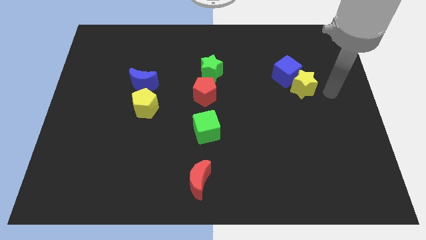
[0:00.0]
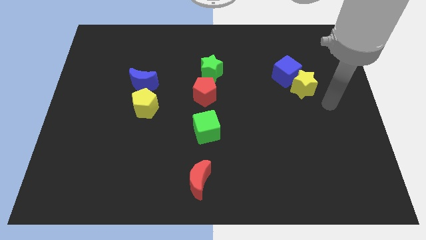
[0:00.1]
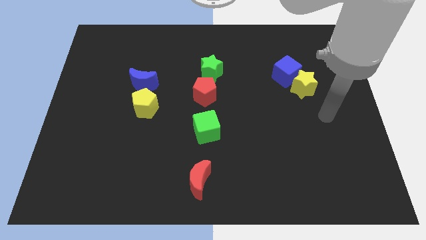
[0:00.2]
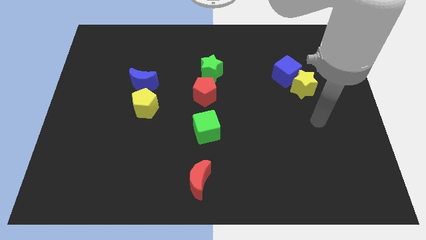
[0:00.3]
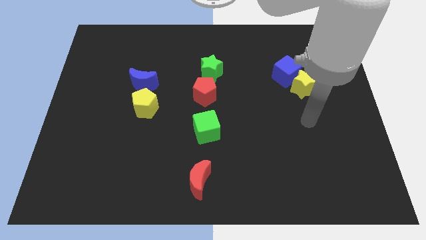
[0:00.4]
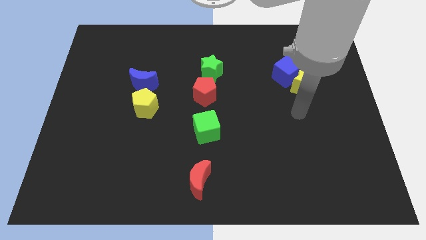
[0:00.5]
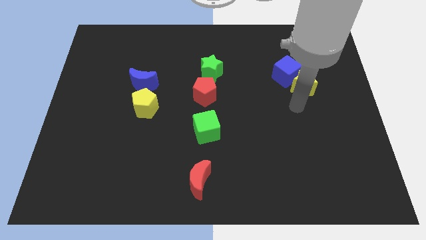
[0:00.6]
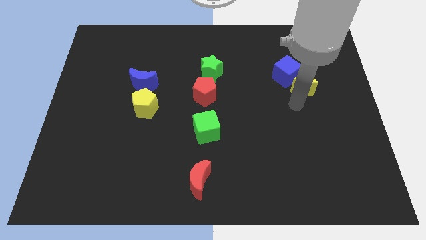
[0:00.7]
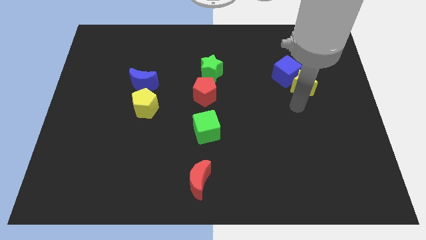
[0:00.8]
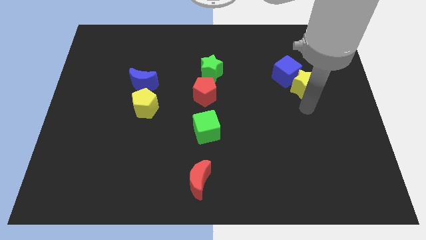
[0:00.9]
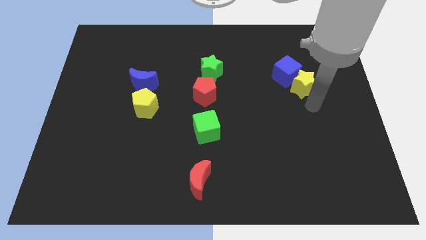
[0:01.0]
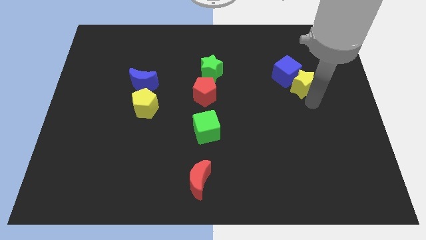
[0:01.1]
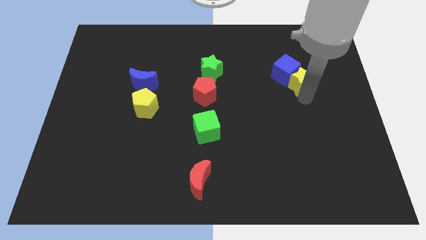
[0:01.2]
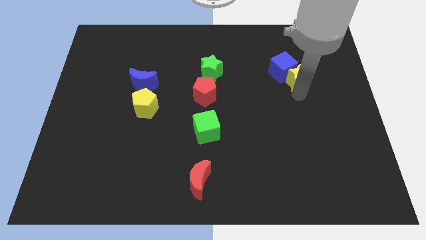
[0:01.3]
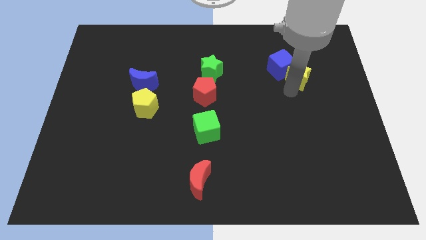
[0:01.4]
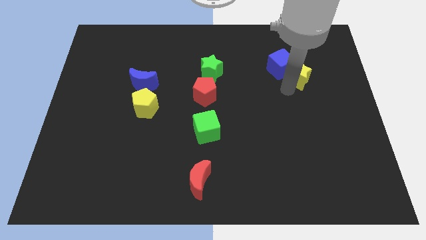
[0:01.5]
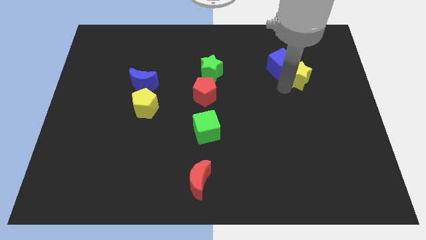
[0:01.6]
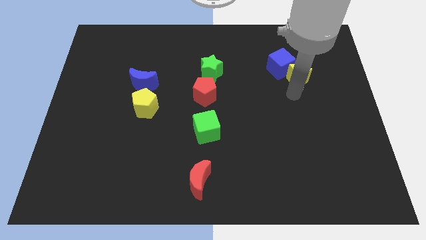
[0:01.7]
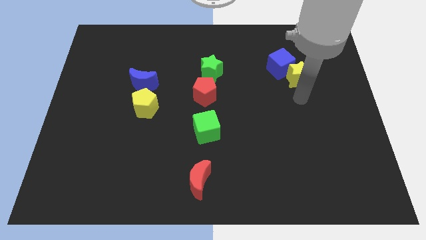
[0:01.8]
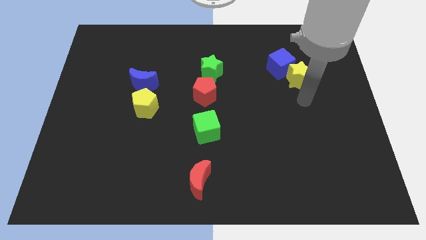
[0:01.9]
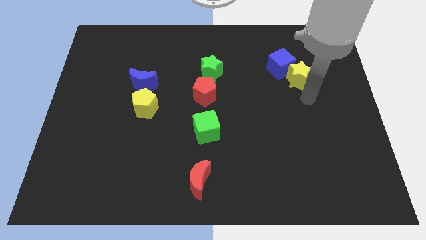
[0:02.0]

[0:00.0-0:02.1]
push the yellow star into the blue cube

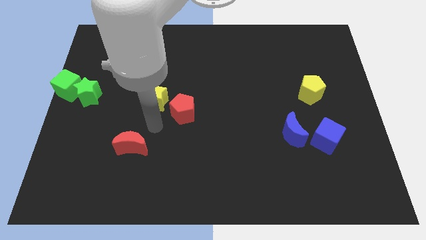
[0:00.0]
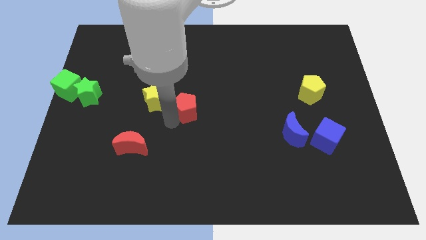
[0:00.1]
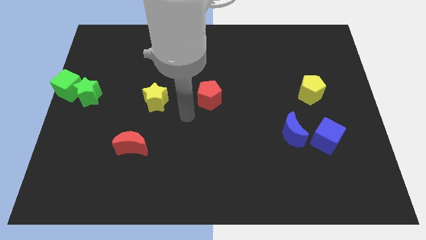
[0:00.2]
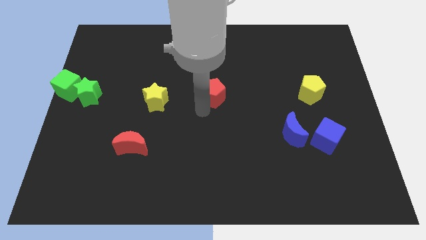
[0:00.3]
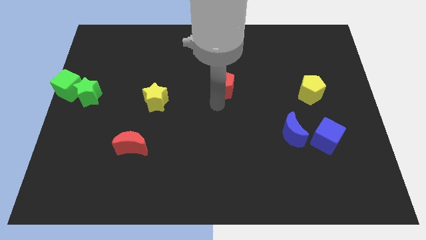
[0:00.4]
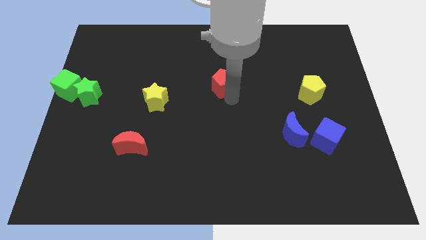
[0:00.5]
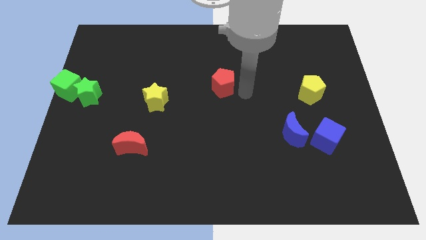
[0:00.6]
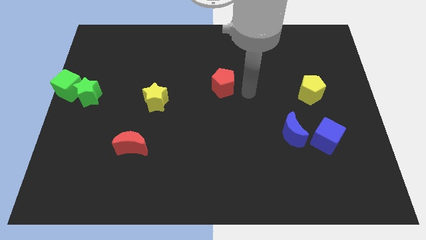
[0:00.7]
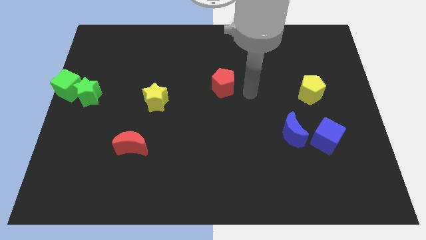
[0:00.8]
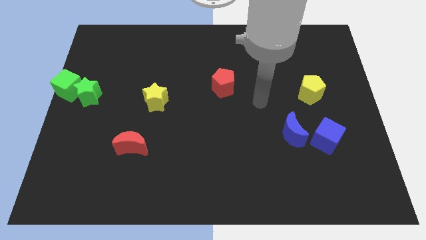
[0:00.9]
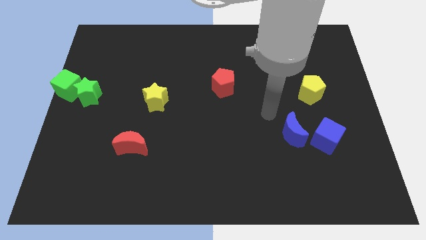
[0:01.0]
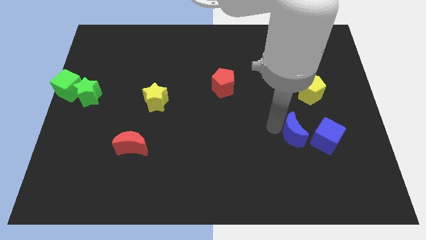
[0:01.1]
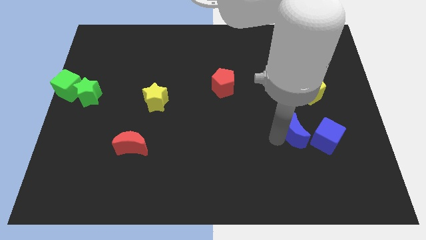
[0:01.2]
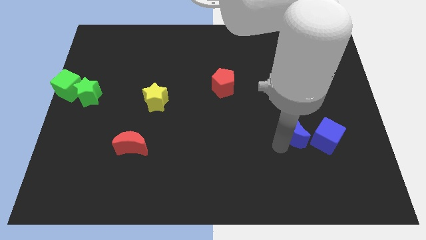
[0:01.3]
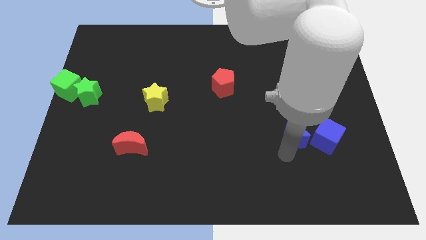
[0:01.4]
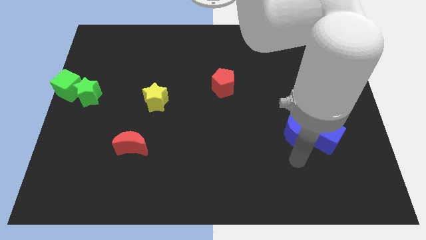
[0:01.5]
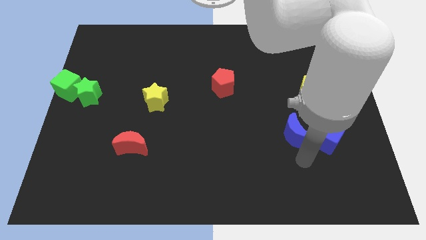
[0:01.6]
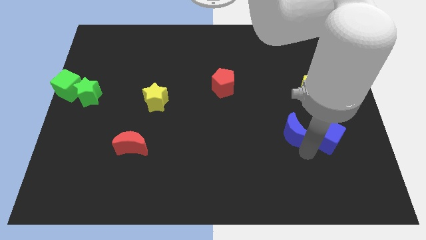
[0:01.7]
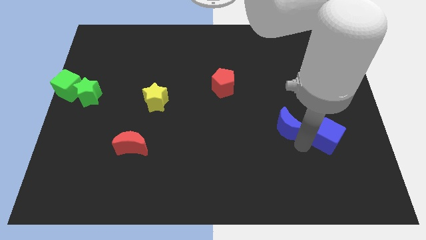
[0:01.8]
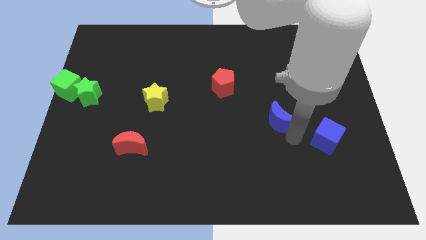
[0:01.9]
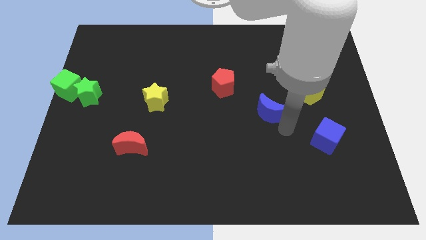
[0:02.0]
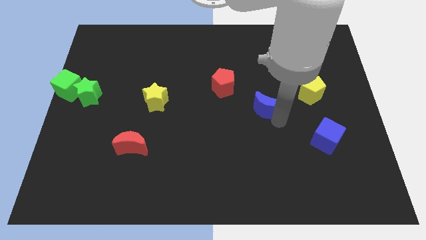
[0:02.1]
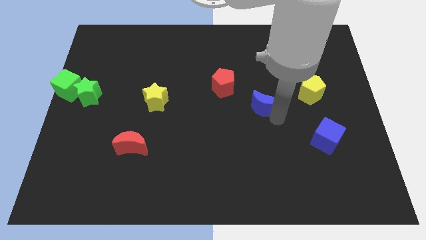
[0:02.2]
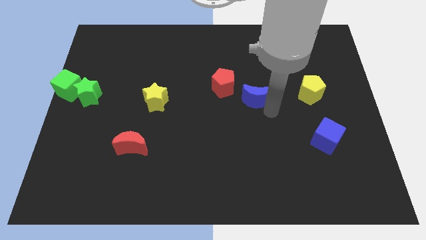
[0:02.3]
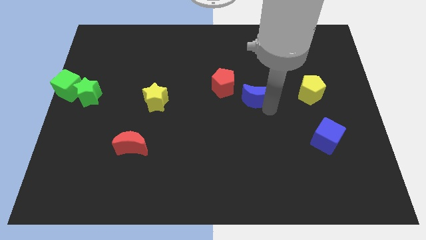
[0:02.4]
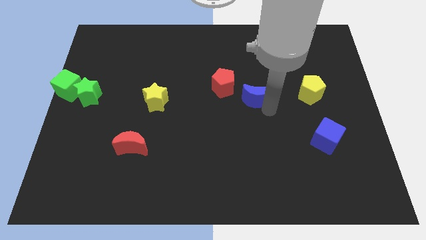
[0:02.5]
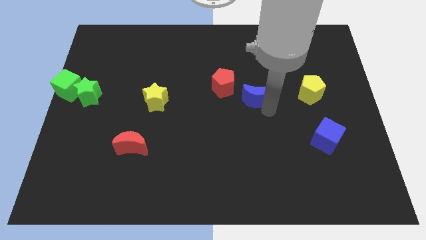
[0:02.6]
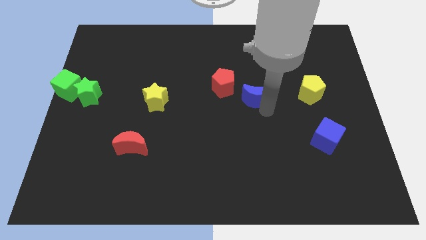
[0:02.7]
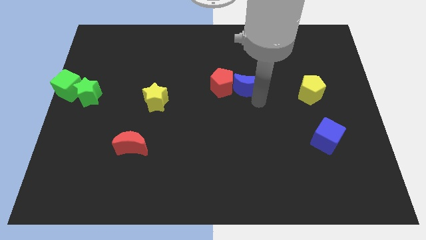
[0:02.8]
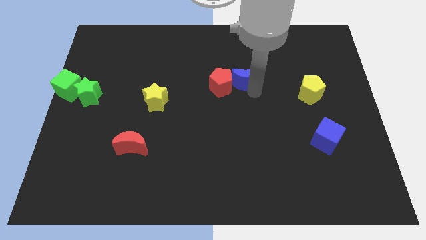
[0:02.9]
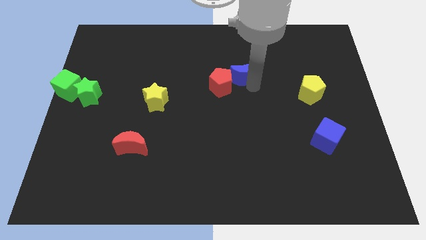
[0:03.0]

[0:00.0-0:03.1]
push the red pentagon towards the top center side of the board

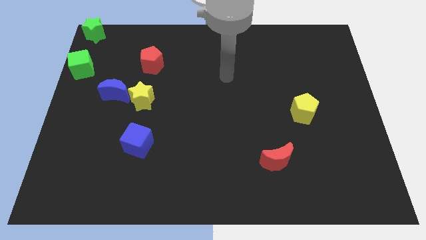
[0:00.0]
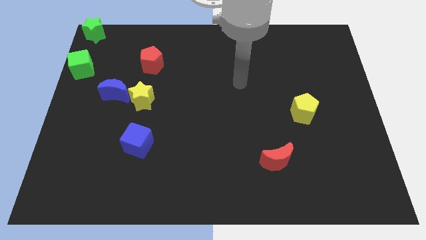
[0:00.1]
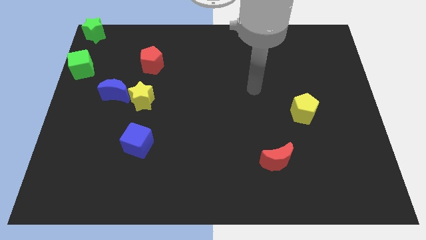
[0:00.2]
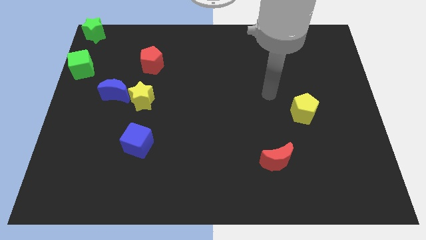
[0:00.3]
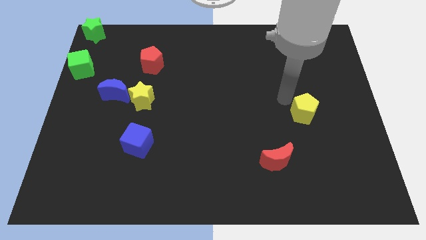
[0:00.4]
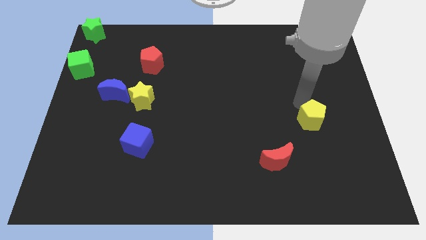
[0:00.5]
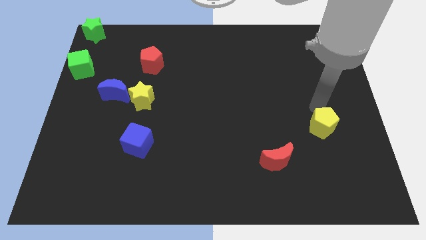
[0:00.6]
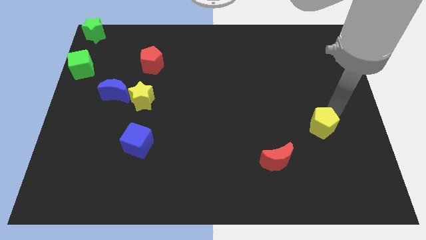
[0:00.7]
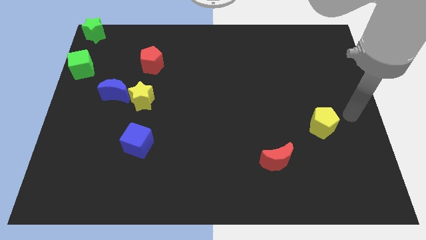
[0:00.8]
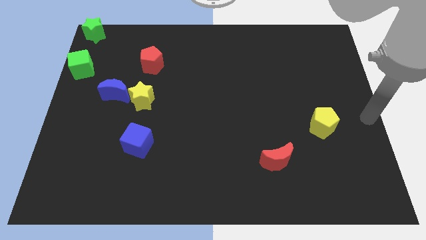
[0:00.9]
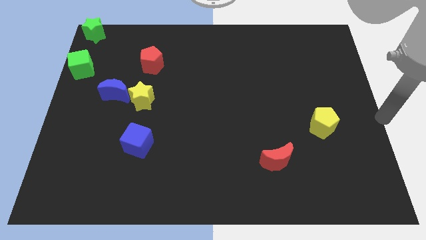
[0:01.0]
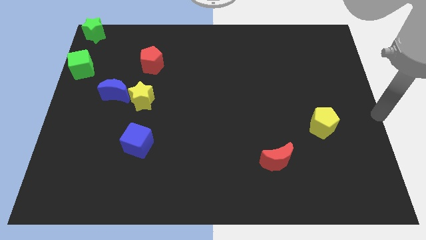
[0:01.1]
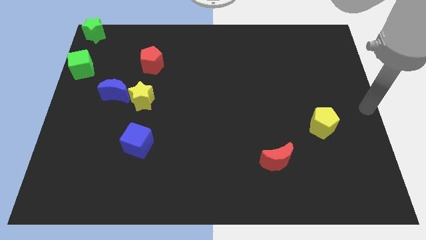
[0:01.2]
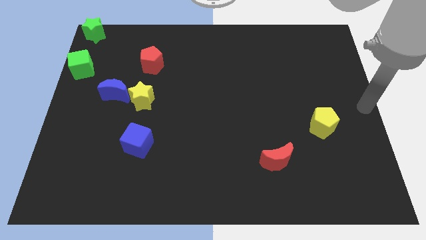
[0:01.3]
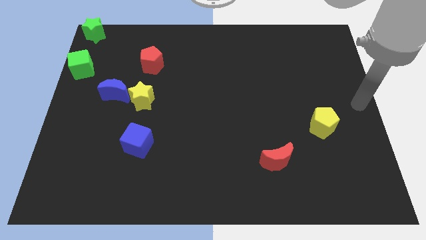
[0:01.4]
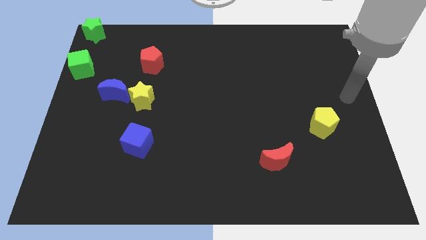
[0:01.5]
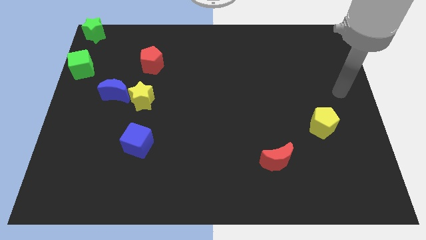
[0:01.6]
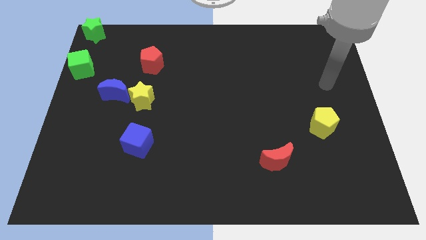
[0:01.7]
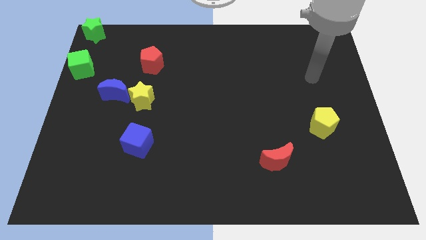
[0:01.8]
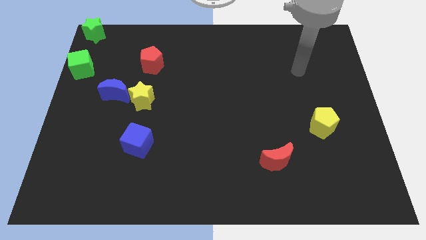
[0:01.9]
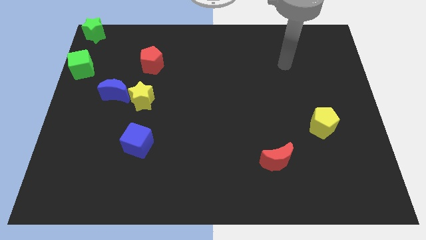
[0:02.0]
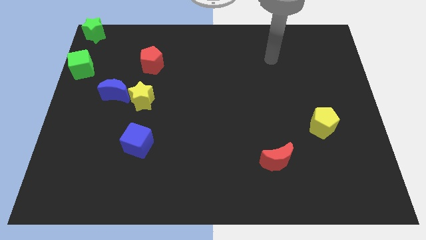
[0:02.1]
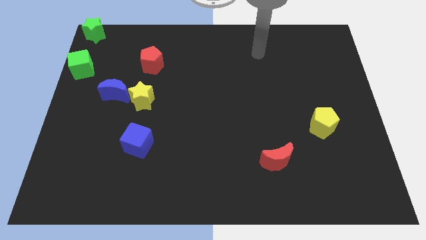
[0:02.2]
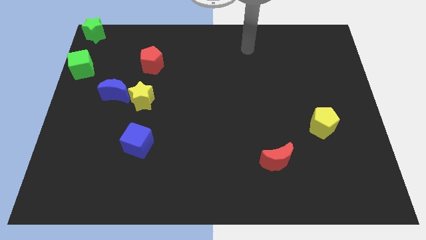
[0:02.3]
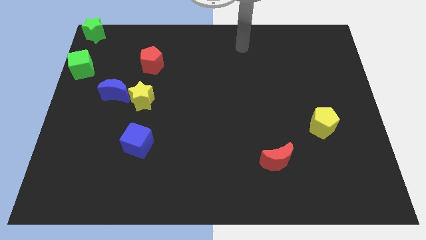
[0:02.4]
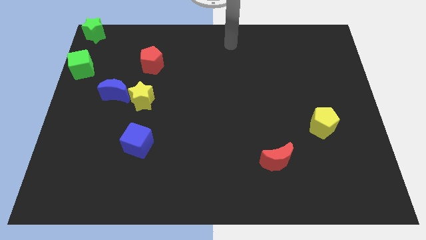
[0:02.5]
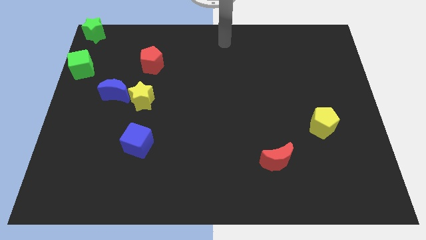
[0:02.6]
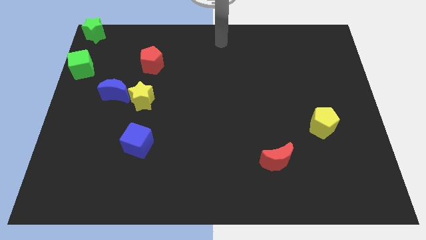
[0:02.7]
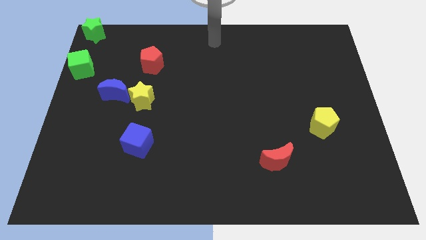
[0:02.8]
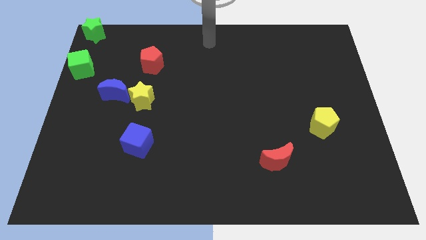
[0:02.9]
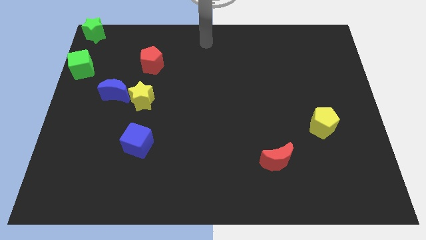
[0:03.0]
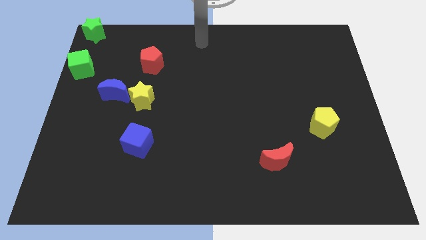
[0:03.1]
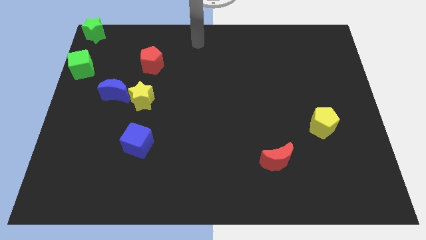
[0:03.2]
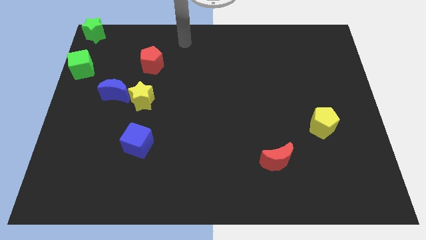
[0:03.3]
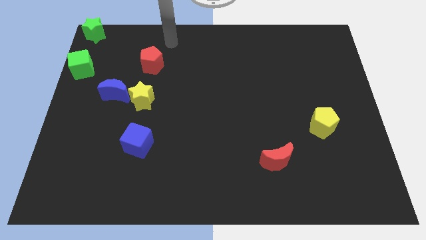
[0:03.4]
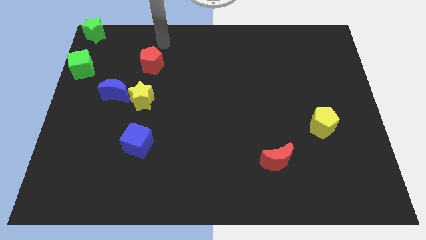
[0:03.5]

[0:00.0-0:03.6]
move the yellow pentagon slightly to the bottom

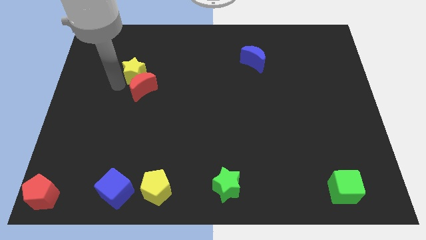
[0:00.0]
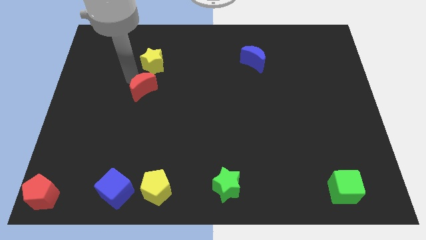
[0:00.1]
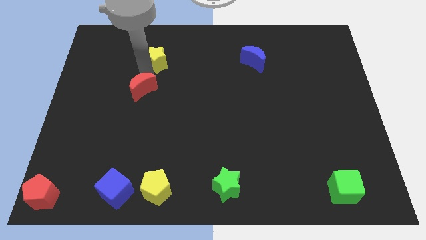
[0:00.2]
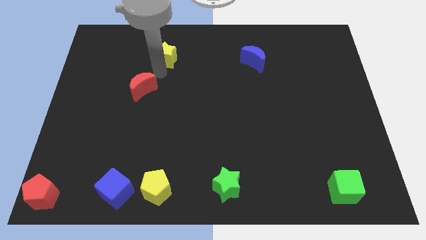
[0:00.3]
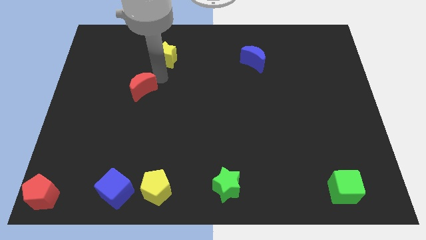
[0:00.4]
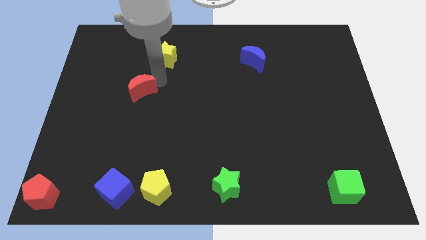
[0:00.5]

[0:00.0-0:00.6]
push yellow star slightly towards upwards
